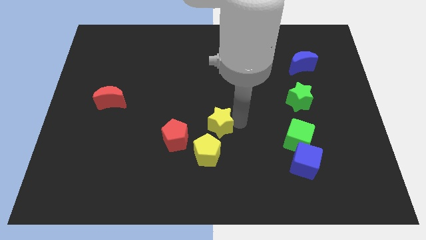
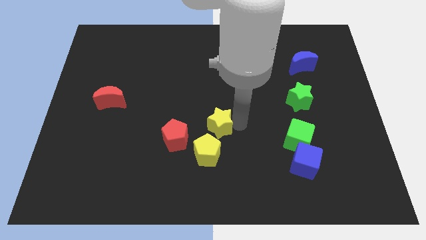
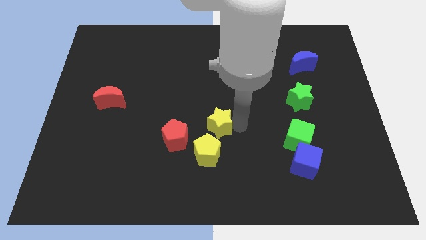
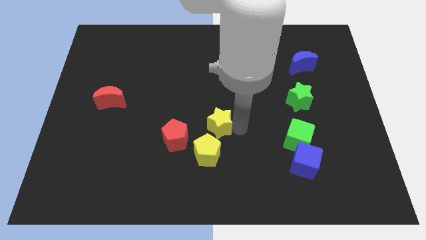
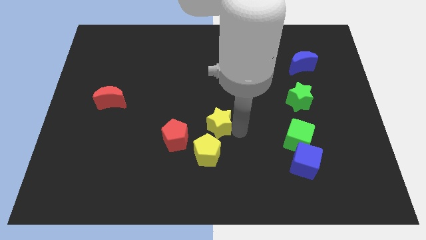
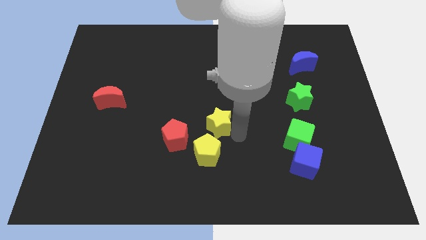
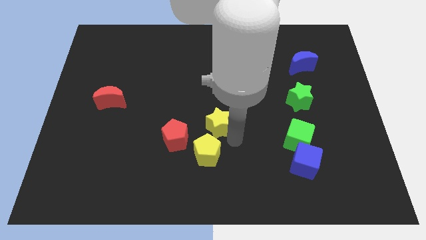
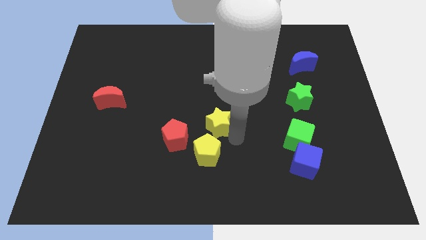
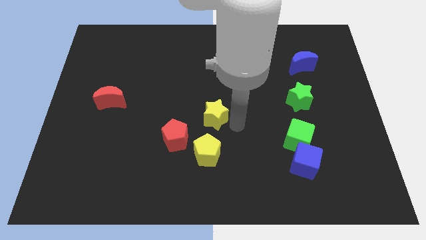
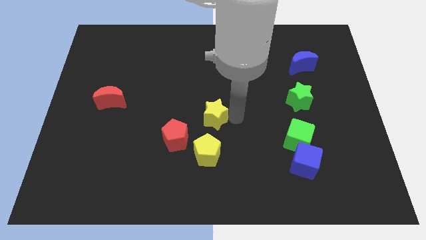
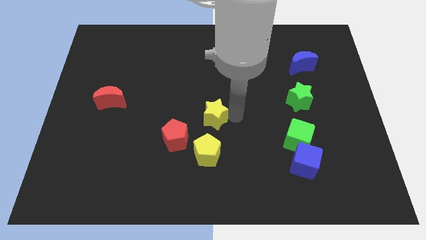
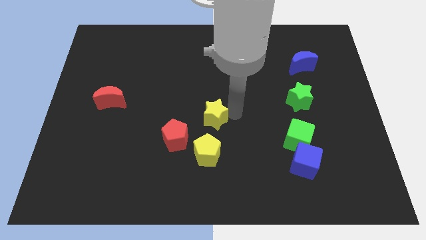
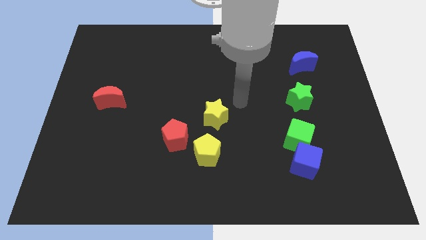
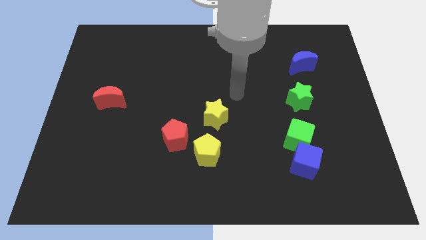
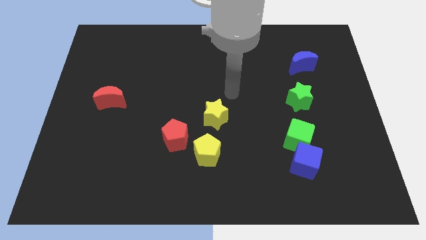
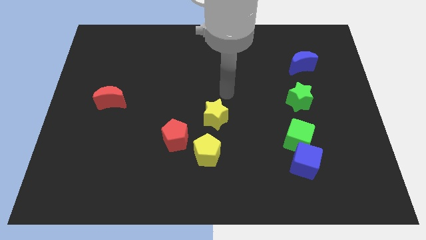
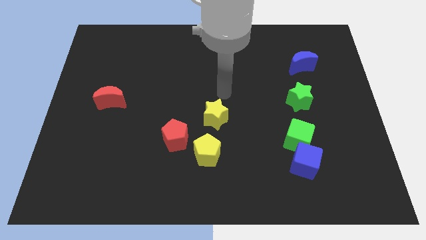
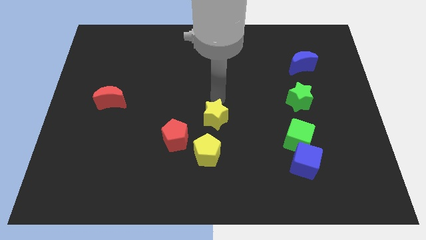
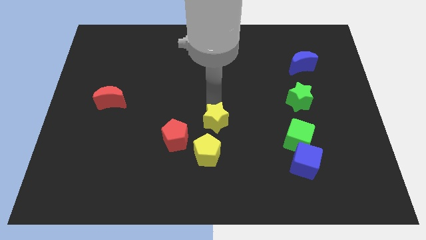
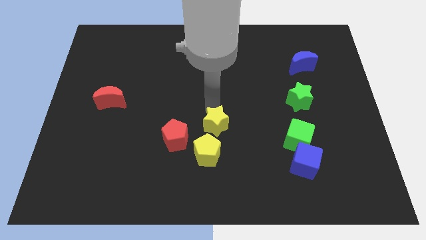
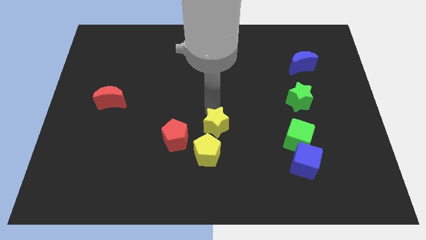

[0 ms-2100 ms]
push the yellow star to the top of the yellow pentagon

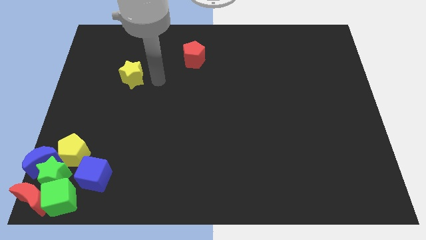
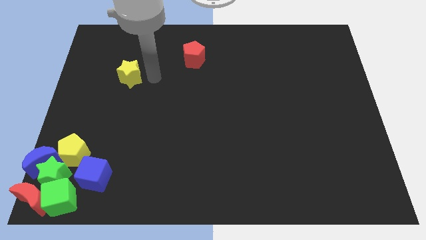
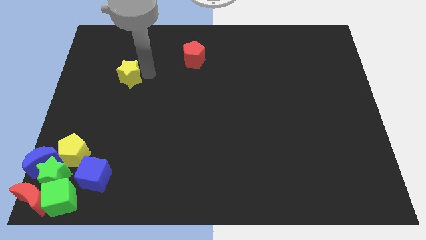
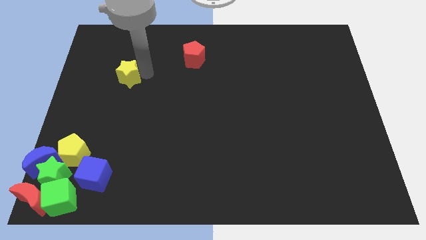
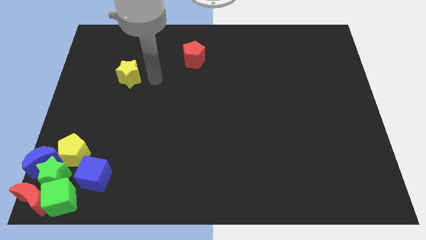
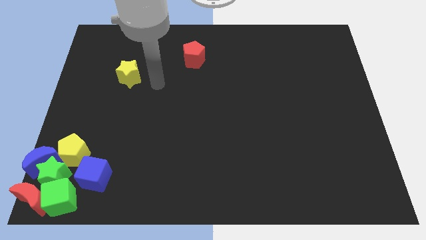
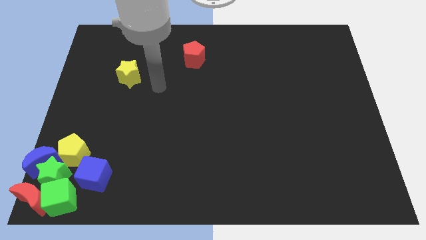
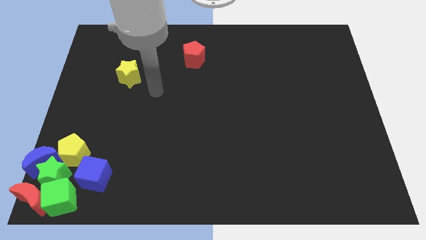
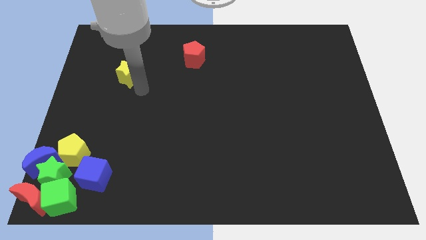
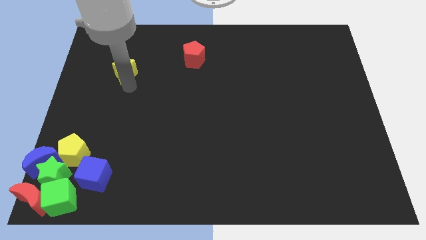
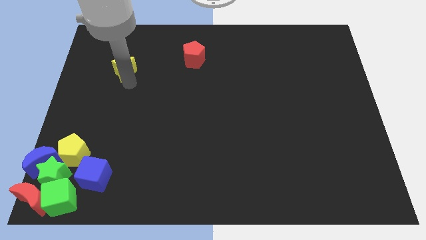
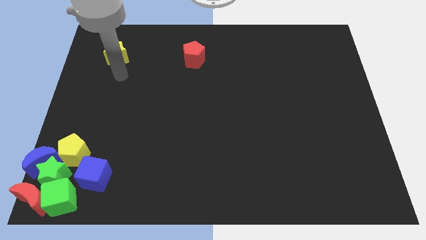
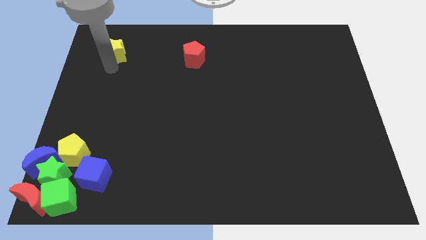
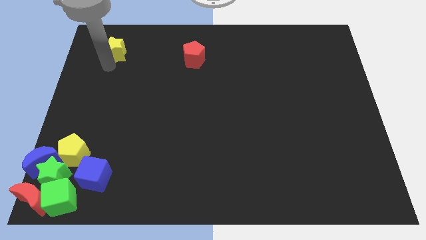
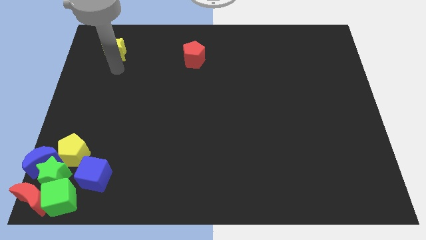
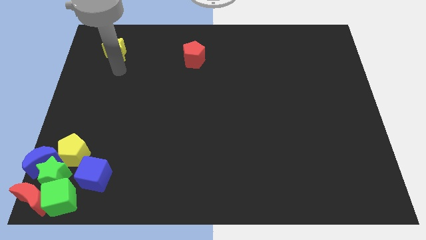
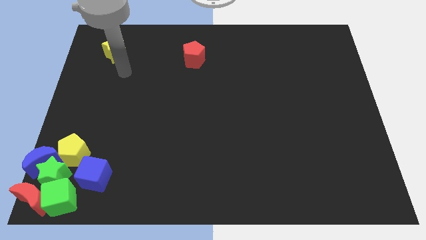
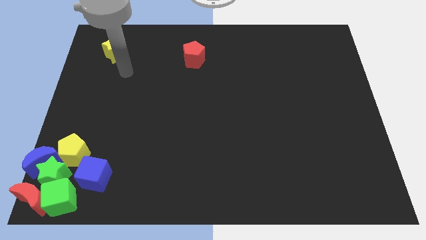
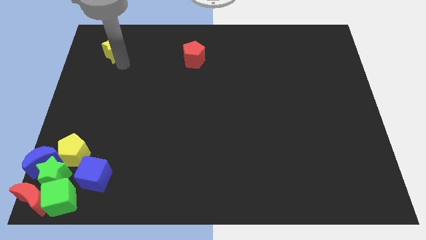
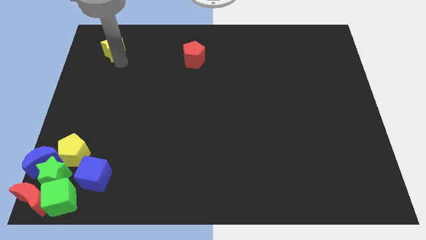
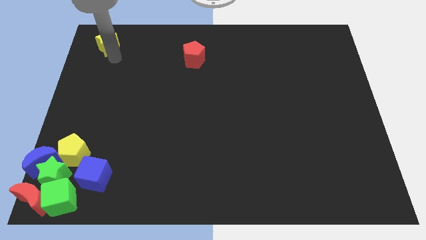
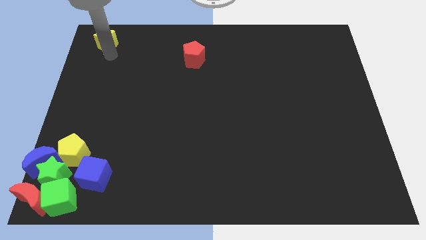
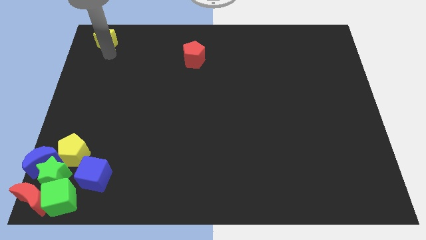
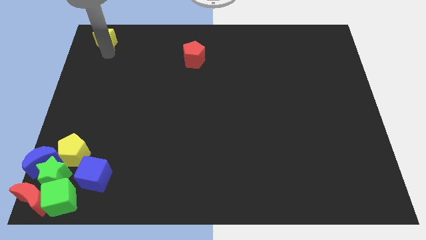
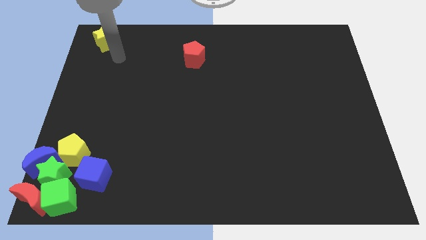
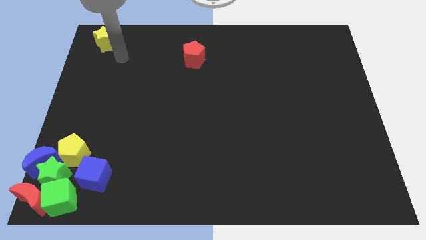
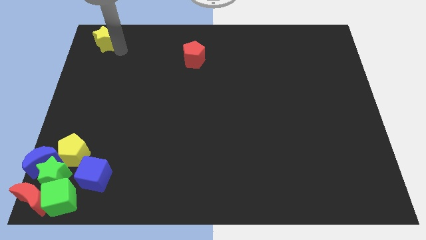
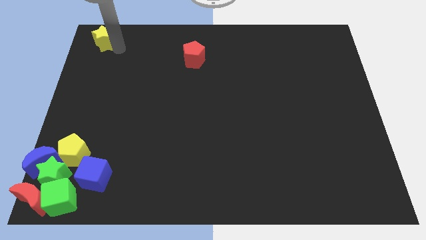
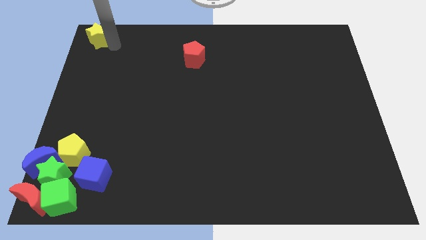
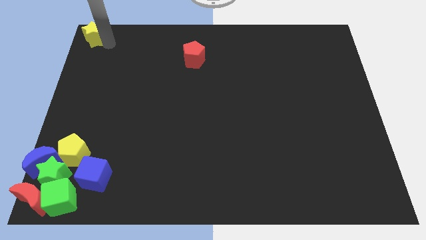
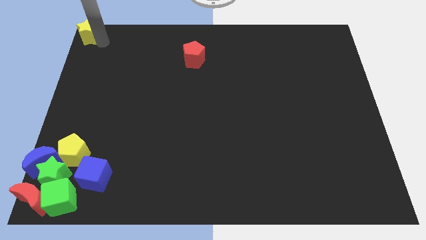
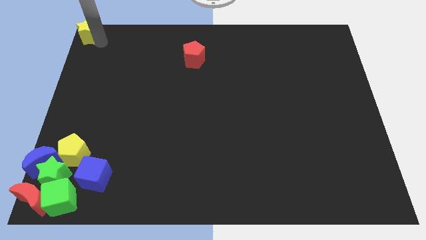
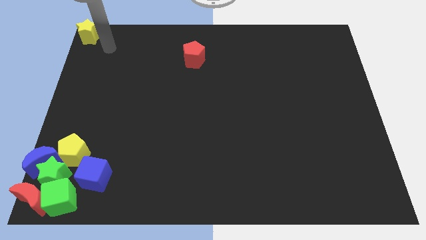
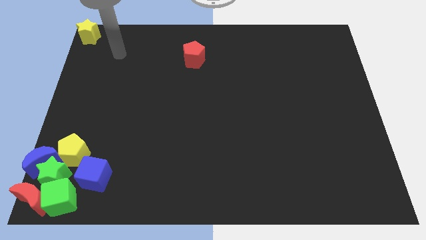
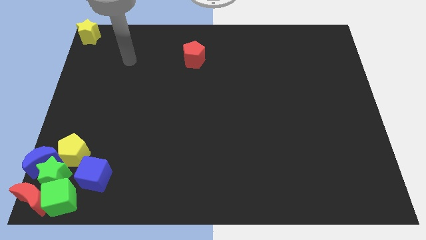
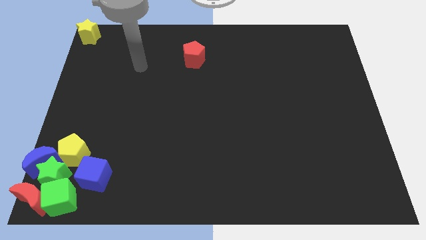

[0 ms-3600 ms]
move the yellow star to the top left of the board

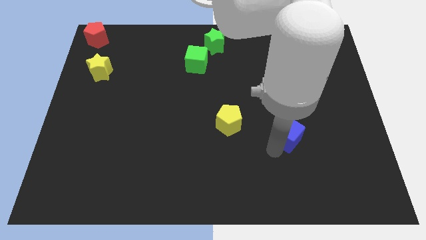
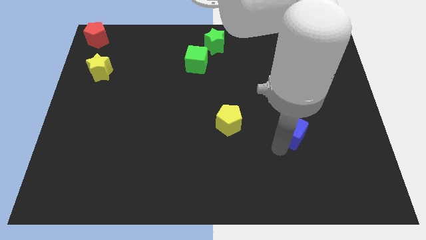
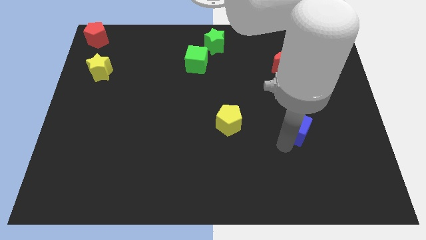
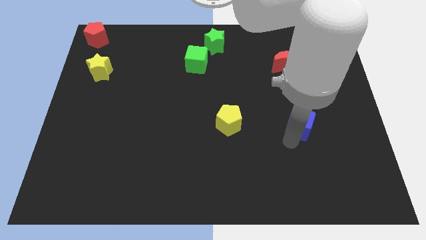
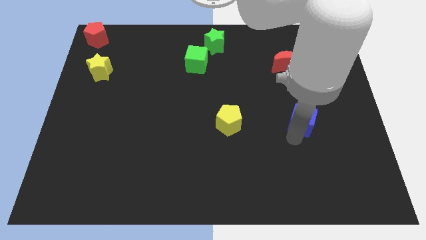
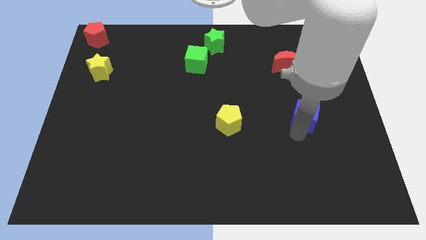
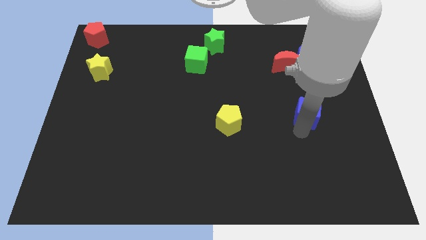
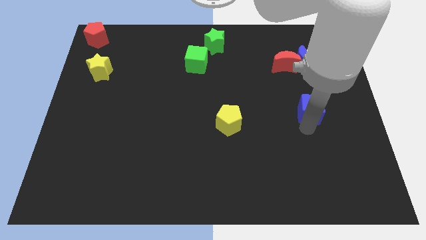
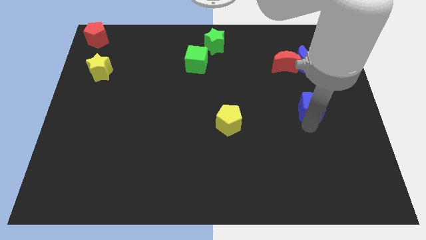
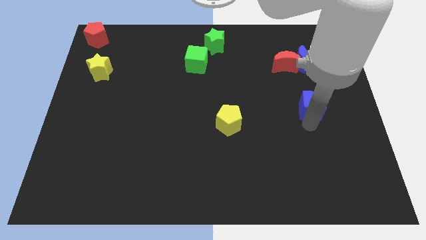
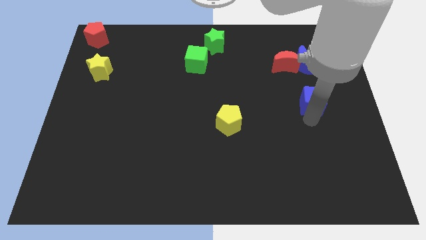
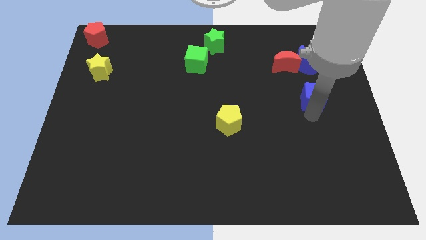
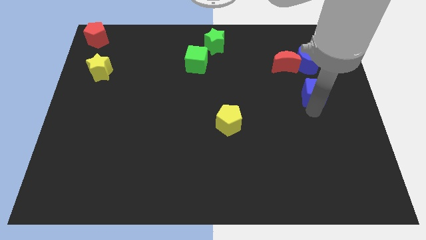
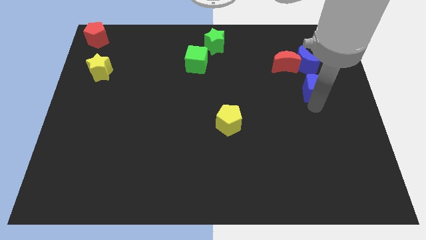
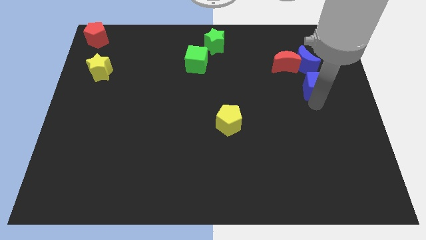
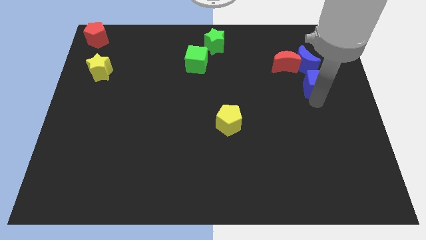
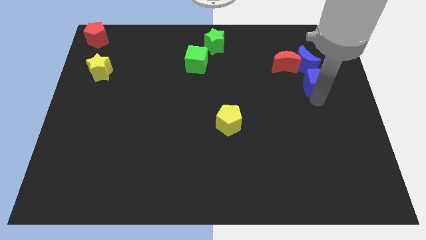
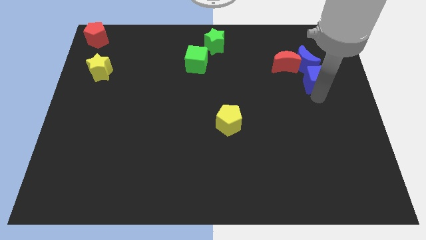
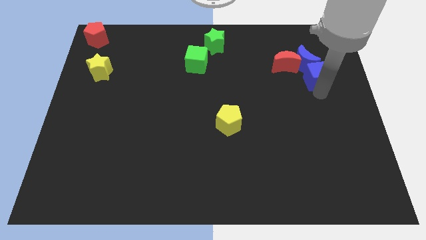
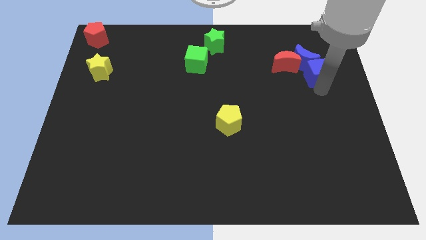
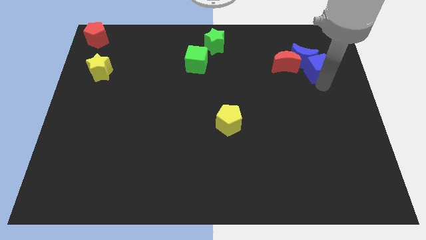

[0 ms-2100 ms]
push the green cube in to the green moon

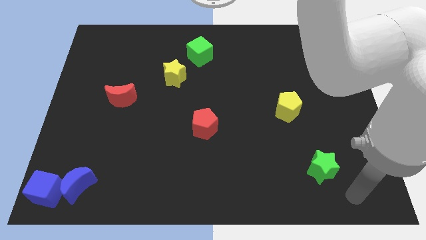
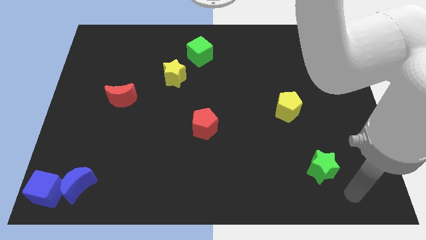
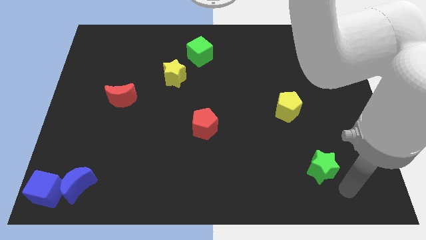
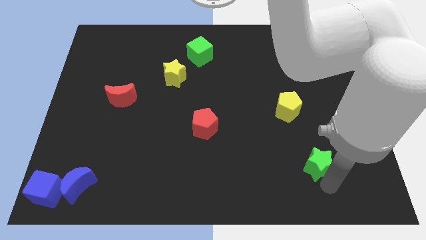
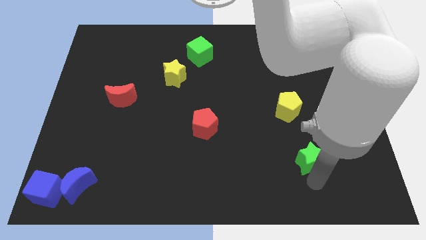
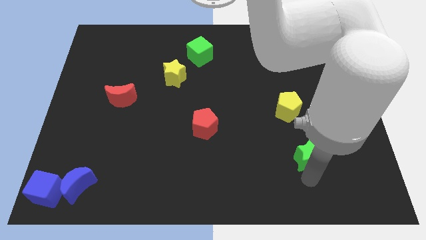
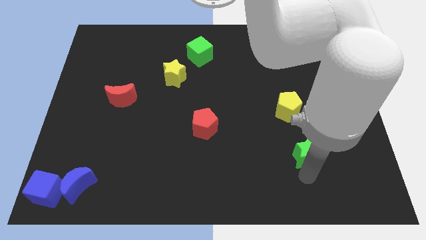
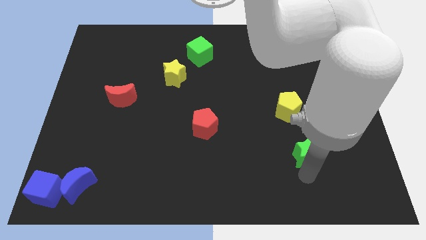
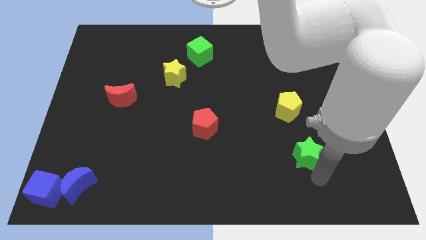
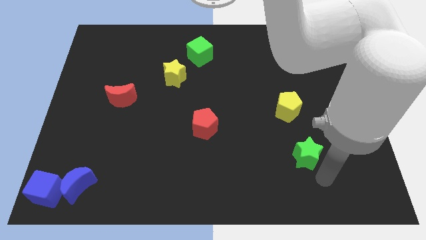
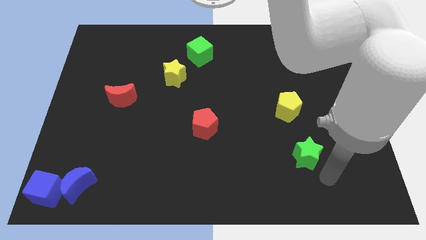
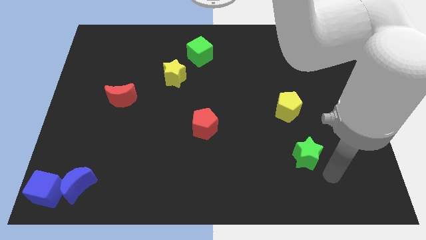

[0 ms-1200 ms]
push the green star to the top of the board
